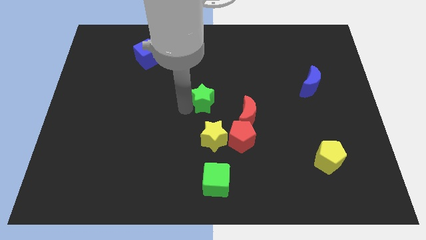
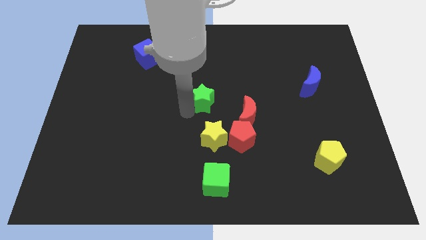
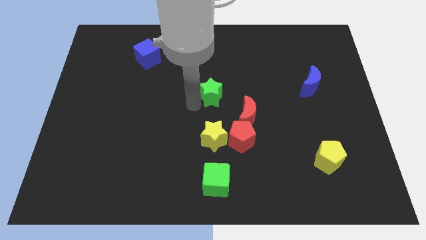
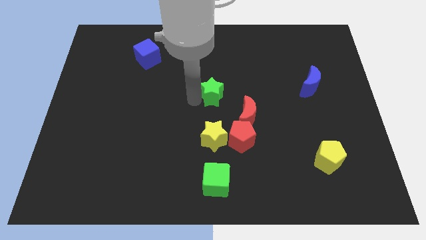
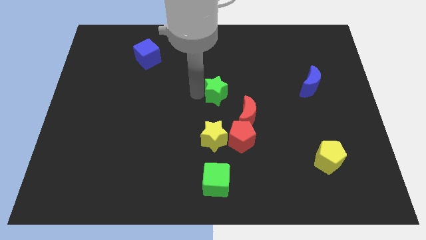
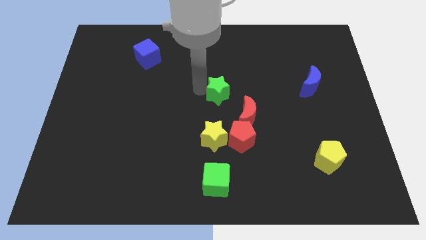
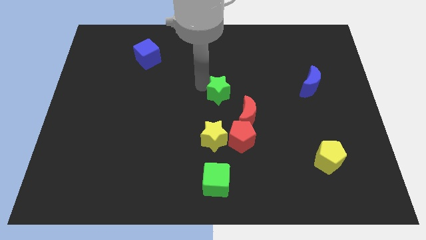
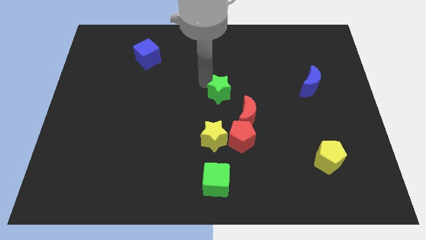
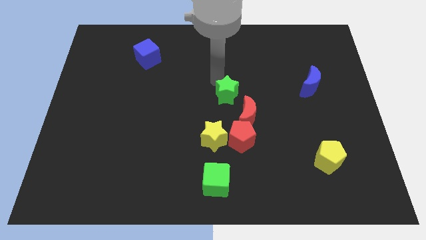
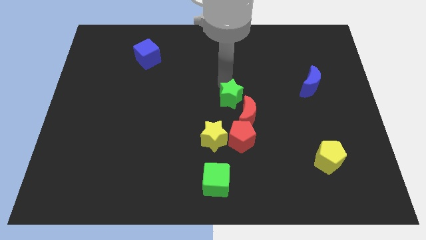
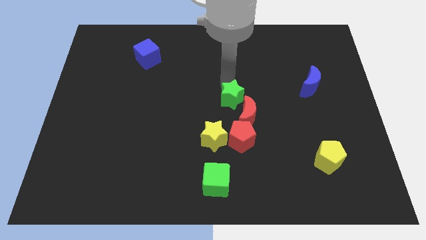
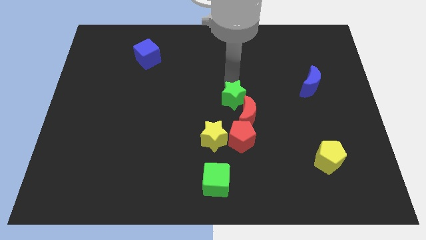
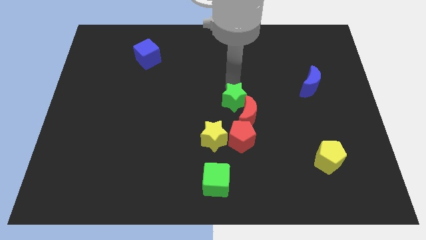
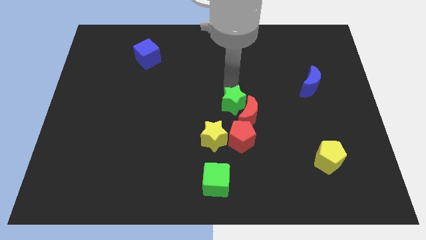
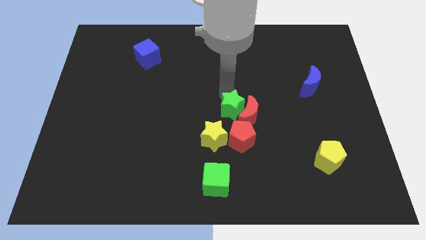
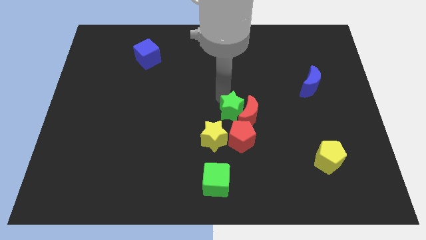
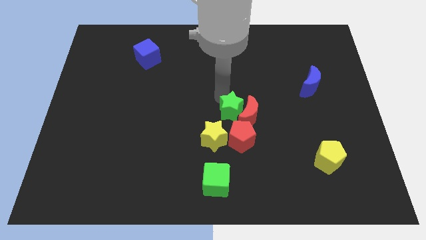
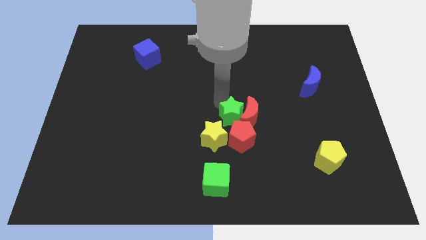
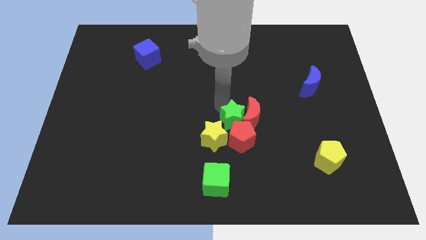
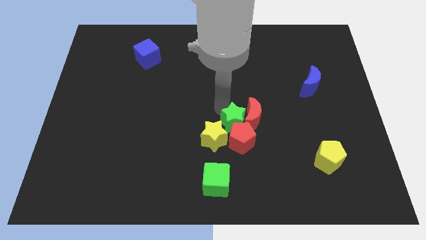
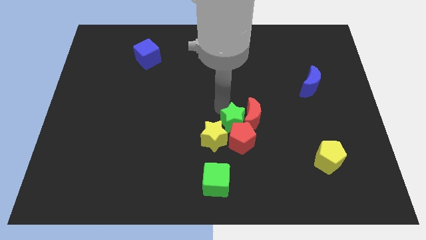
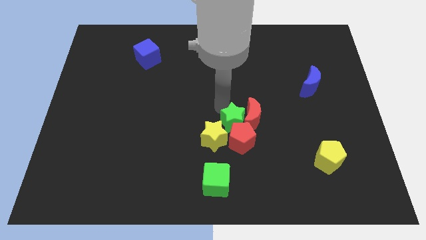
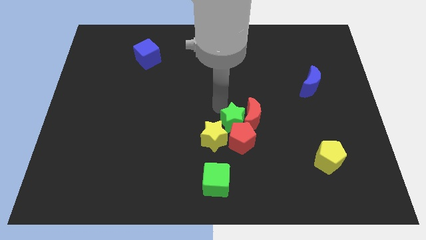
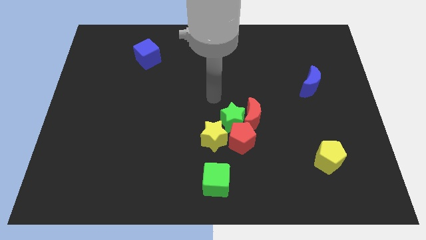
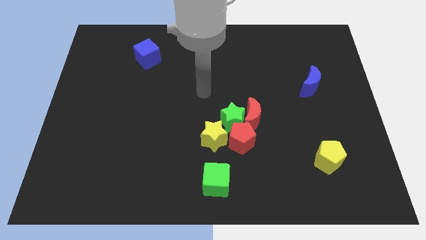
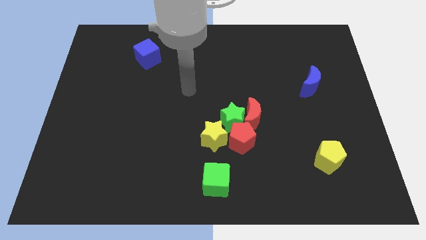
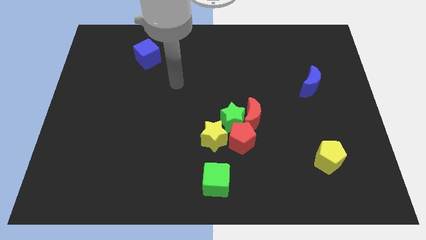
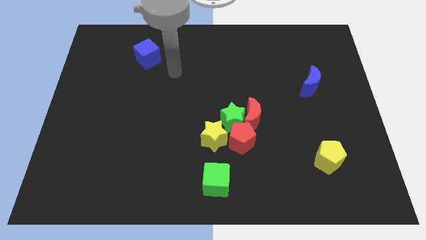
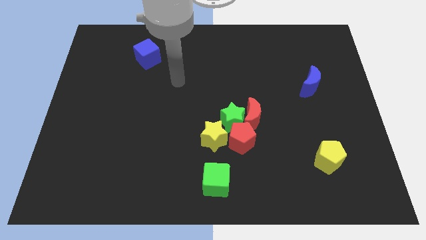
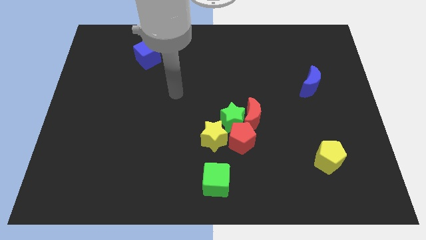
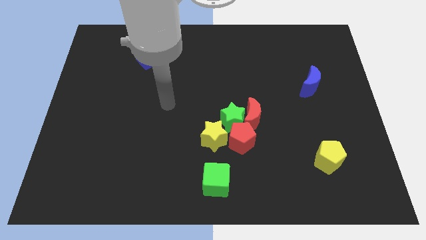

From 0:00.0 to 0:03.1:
place green star at the top of the red pentagon

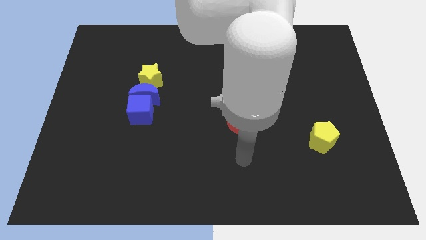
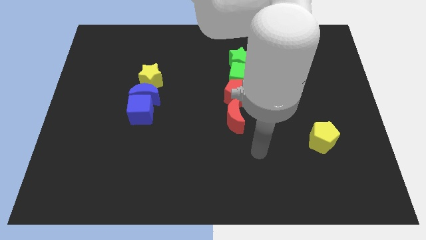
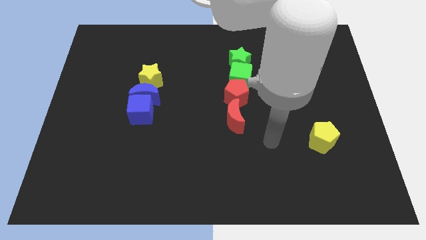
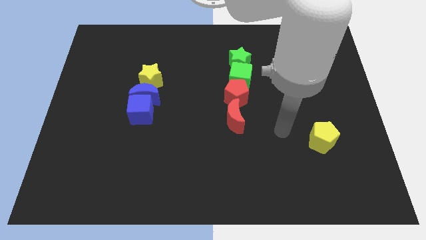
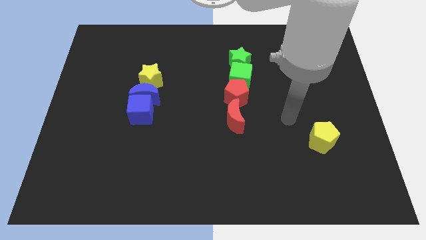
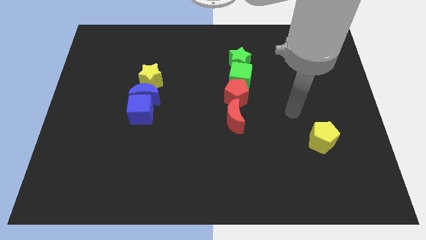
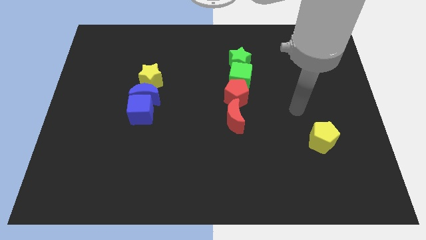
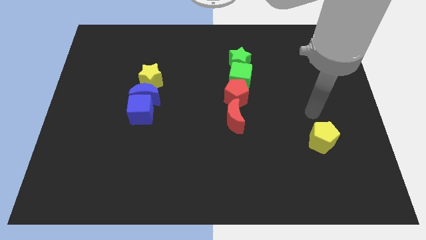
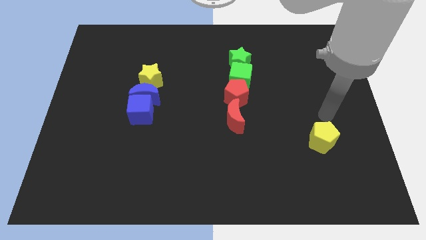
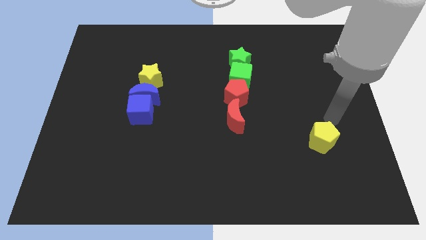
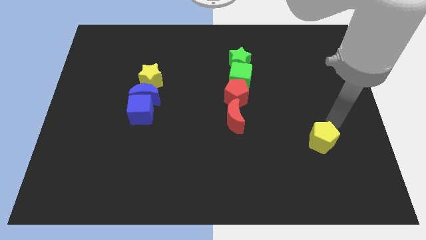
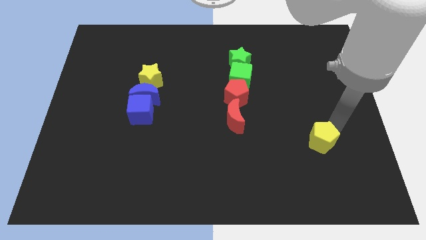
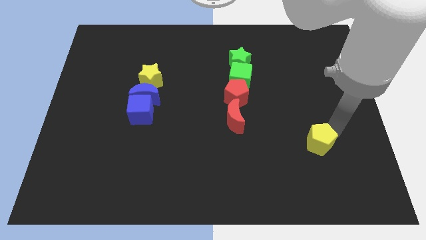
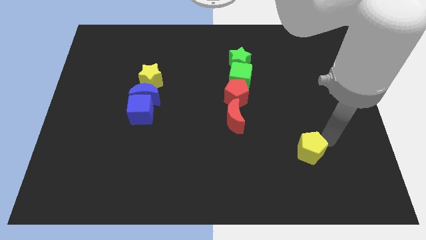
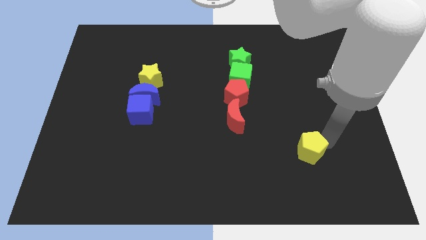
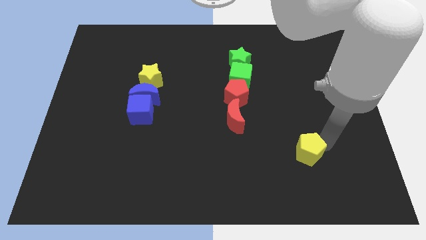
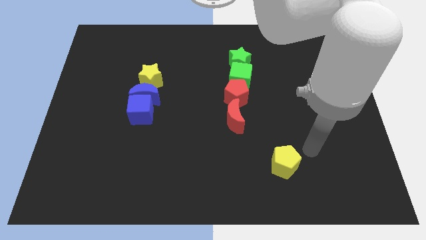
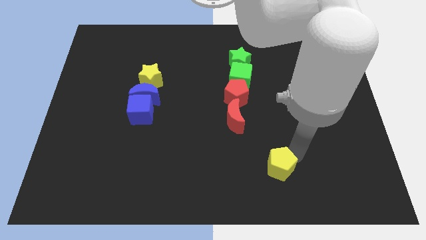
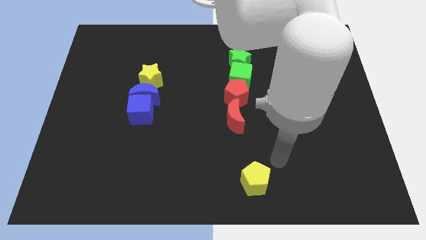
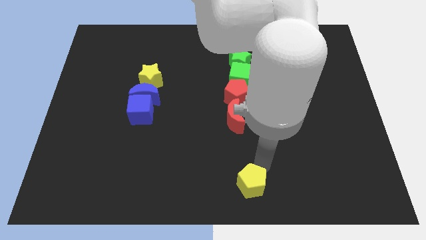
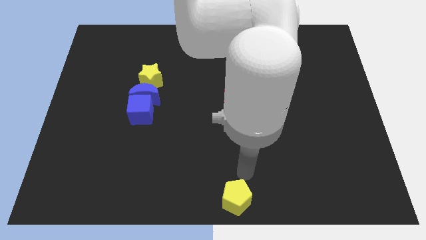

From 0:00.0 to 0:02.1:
move the yellow pentagon towards bottom center

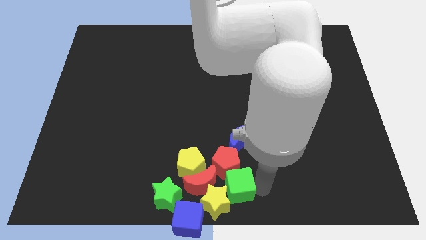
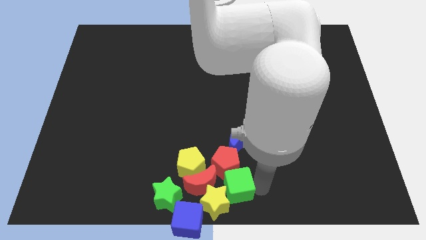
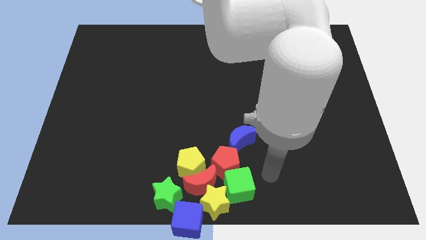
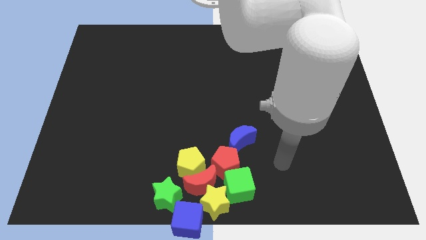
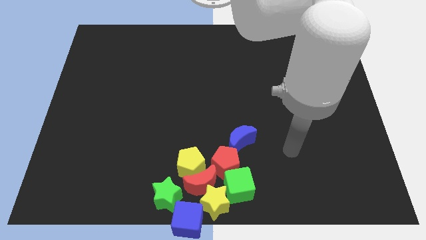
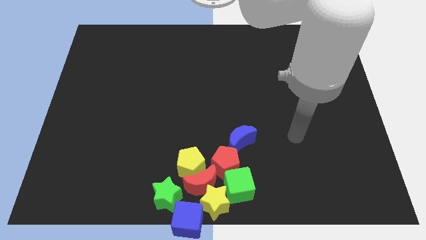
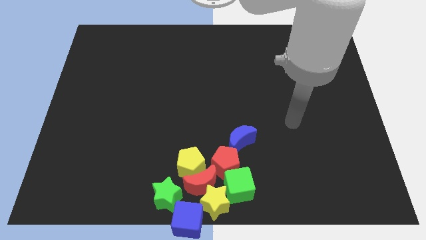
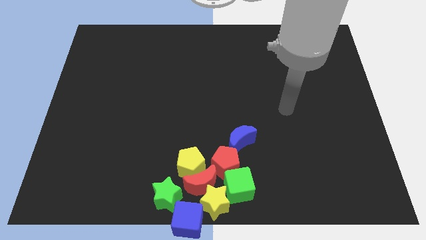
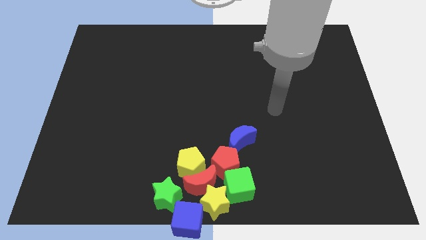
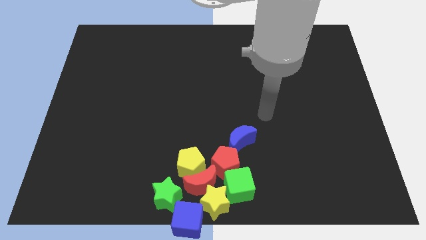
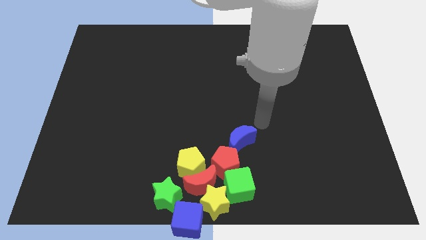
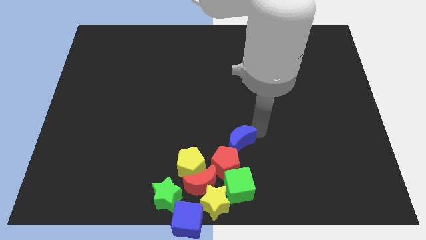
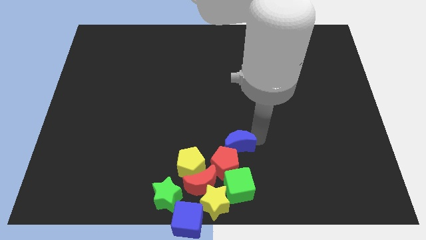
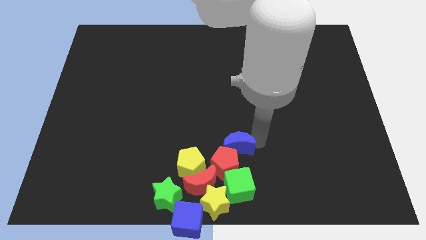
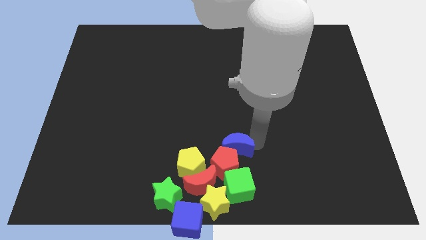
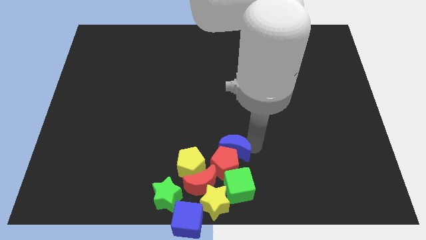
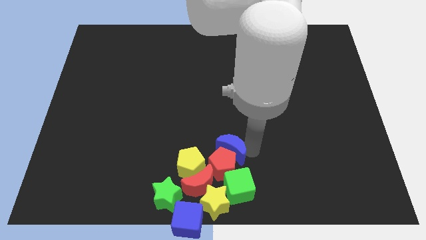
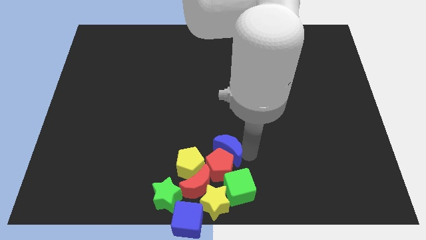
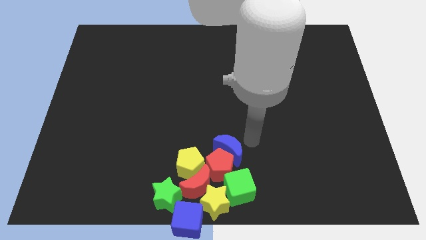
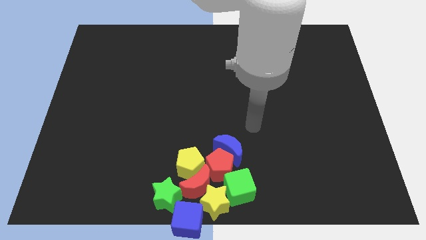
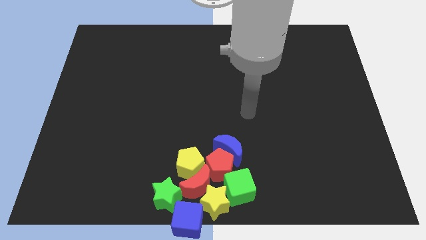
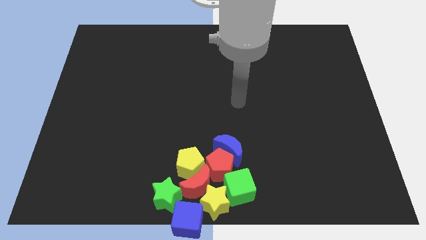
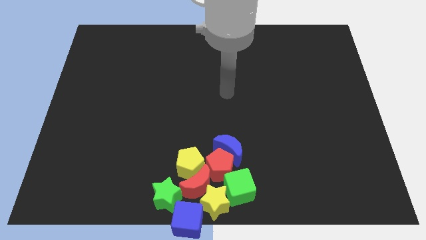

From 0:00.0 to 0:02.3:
push the blue moon into the group of all the blocks

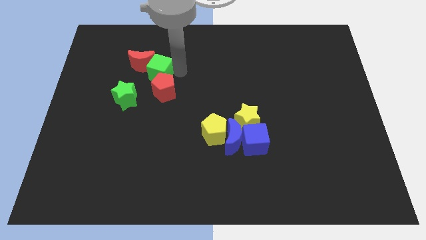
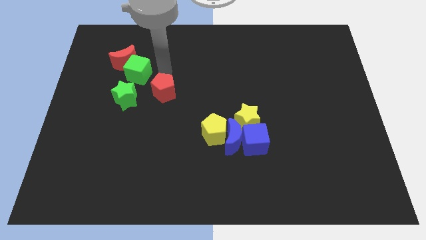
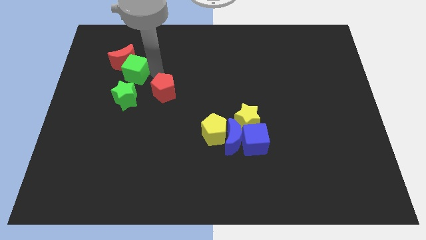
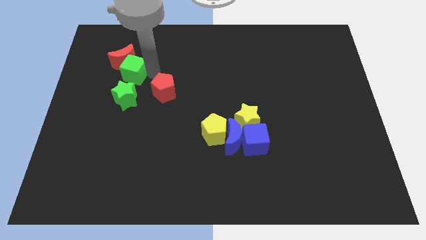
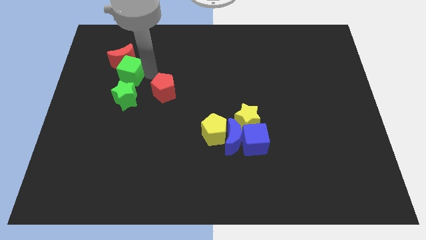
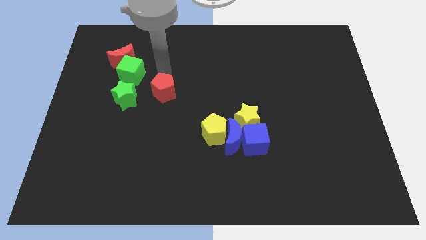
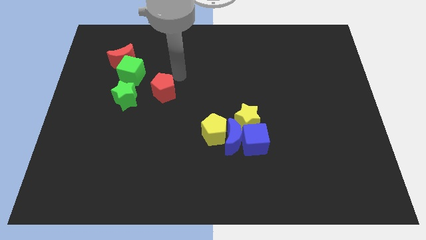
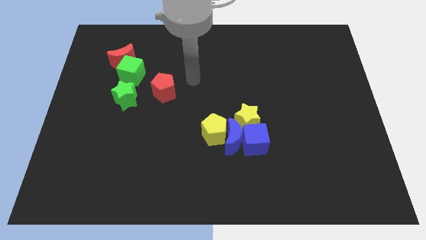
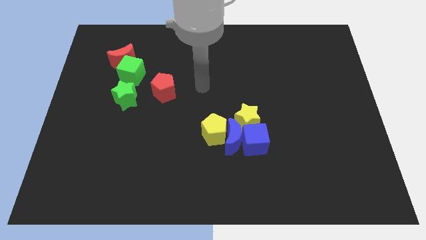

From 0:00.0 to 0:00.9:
push the green cube slightly to the left

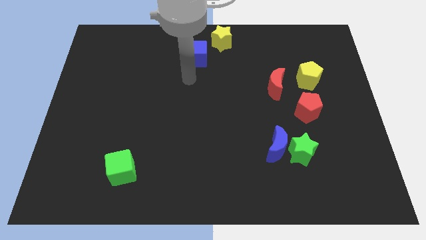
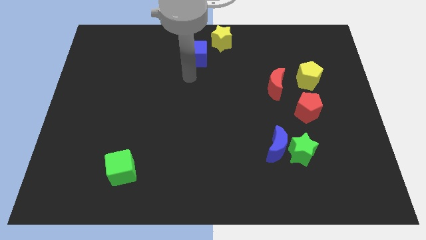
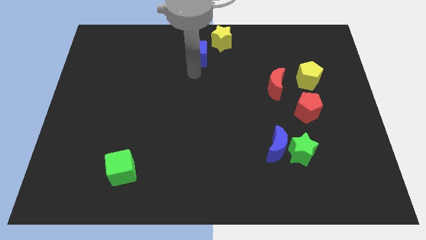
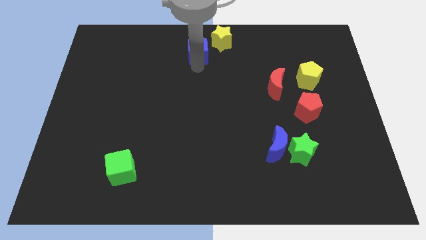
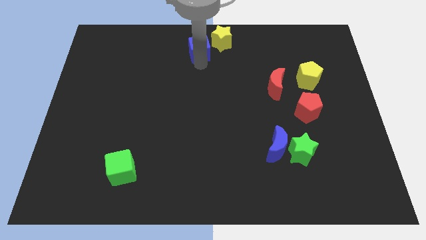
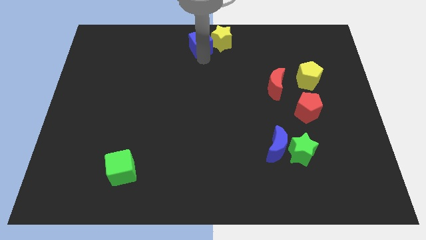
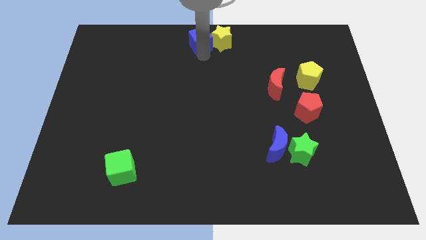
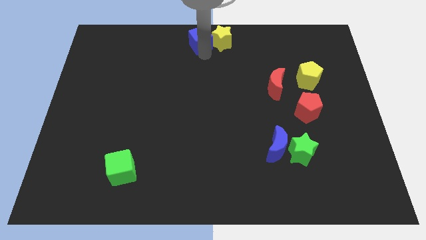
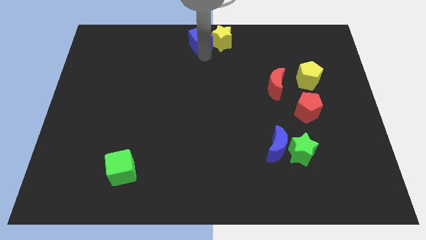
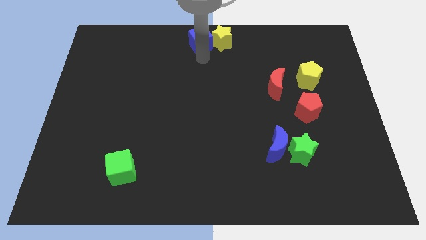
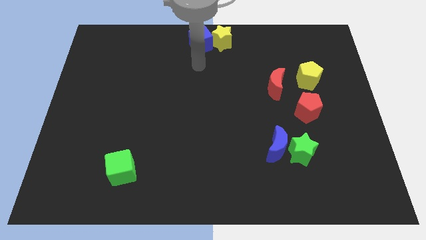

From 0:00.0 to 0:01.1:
move the blue cube into the yellow star
